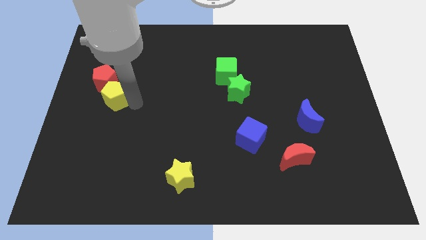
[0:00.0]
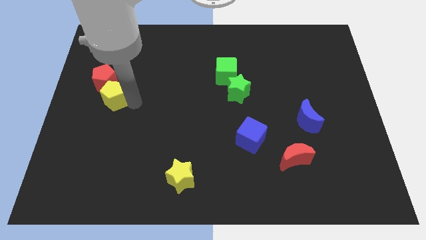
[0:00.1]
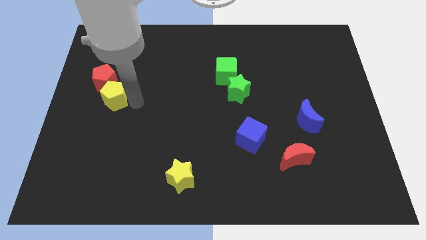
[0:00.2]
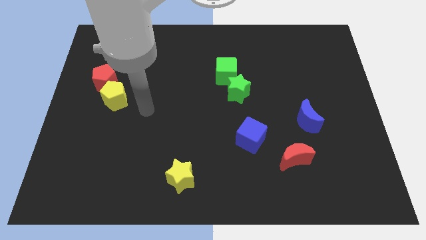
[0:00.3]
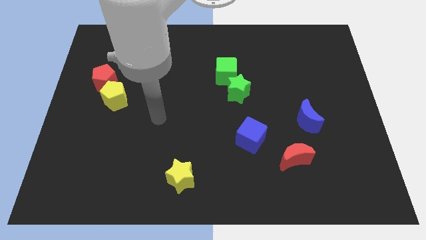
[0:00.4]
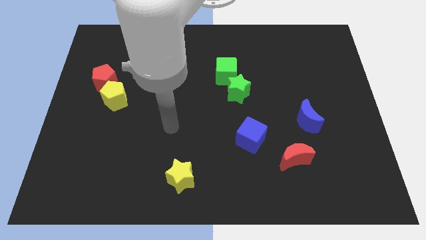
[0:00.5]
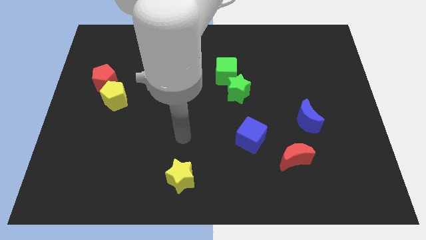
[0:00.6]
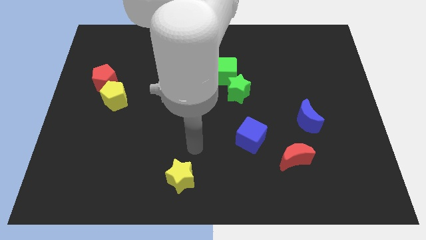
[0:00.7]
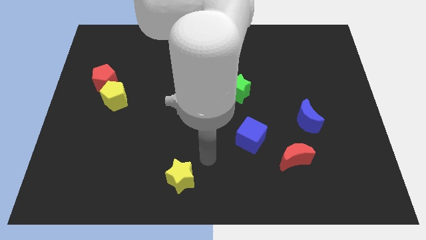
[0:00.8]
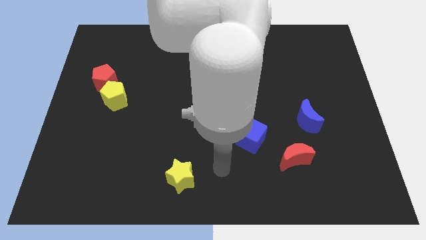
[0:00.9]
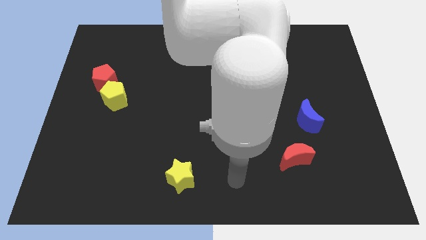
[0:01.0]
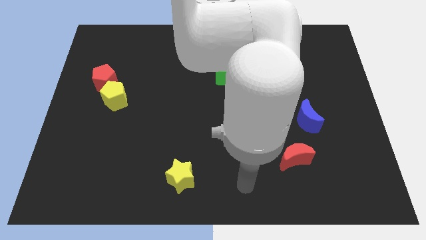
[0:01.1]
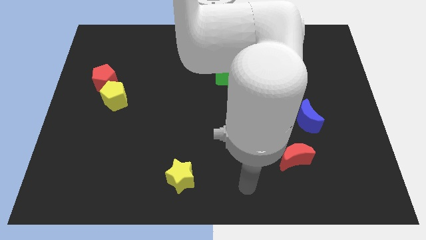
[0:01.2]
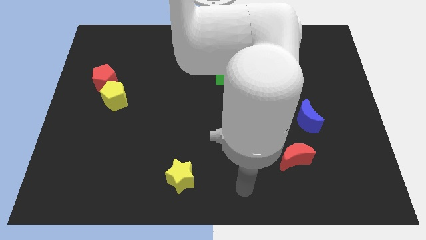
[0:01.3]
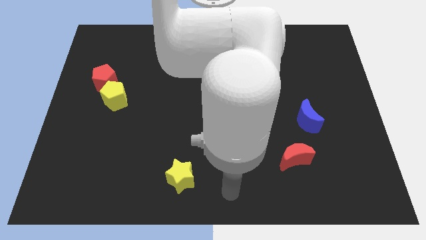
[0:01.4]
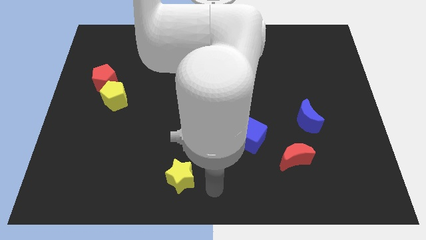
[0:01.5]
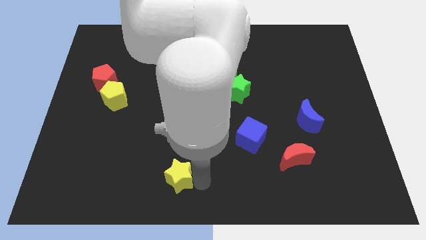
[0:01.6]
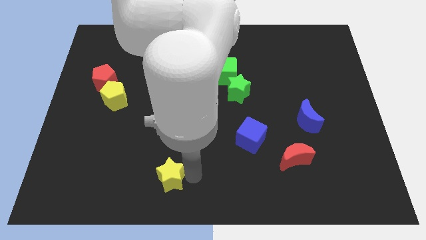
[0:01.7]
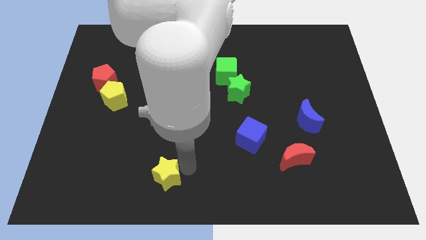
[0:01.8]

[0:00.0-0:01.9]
move your arm towards the yellow star

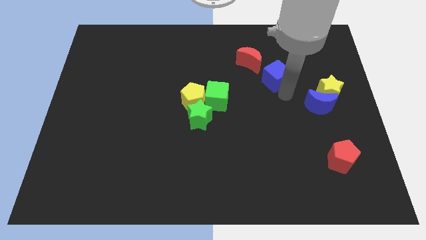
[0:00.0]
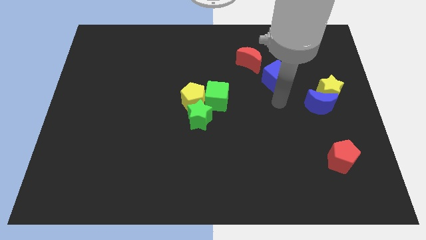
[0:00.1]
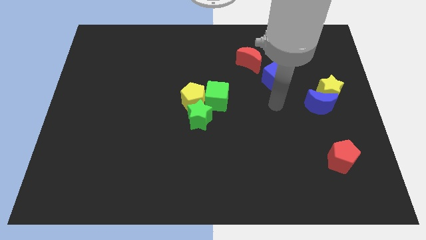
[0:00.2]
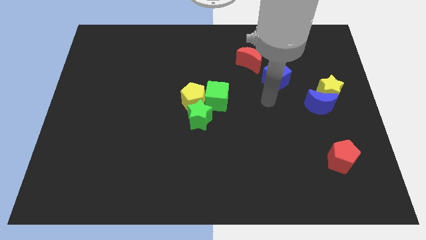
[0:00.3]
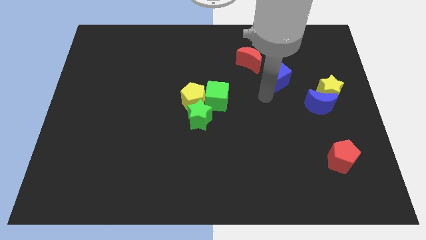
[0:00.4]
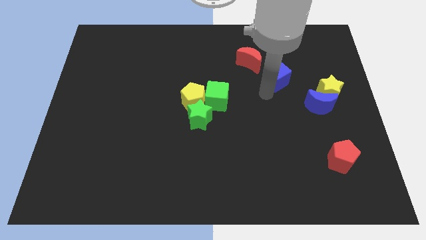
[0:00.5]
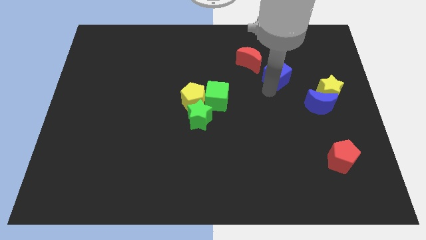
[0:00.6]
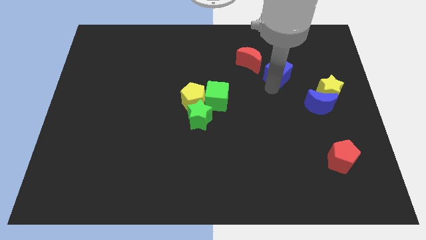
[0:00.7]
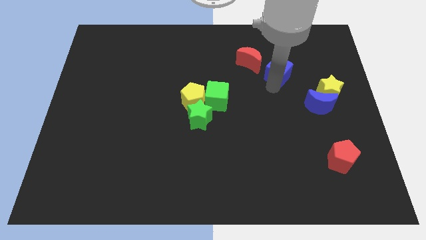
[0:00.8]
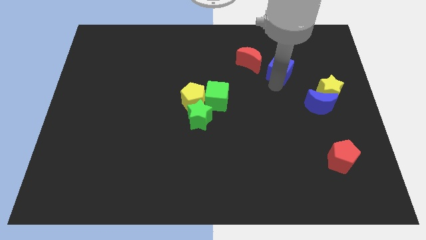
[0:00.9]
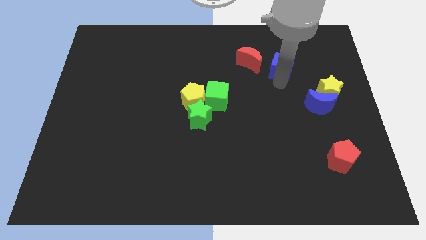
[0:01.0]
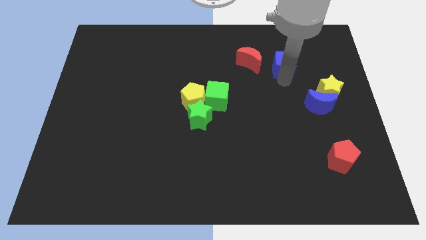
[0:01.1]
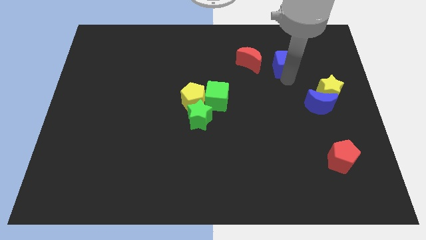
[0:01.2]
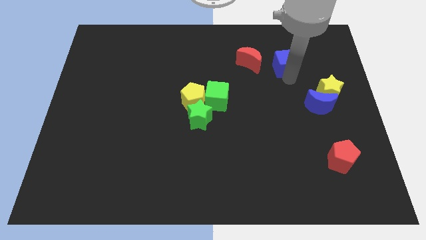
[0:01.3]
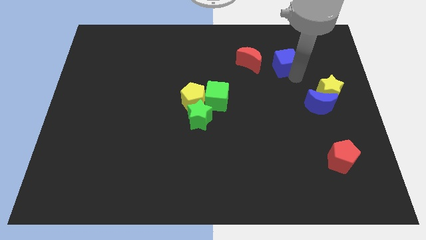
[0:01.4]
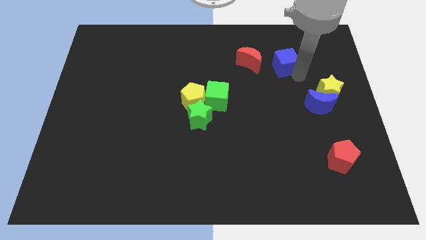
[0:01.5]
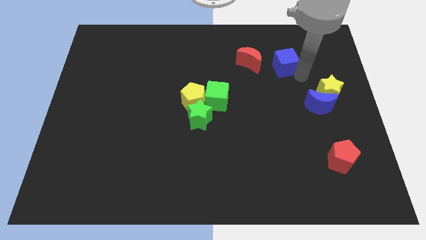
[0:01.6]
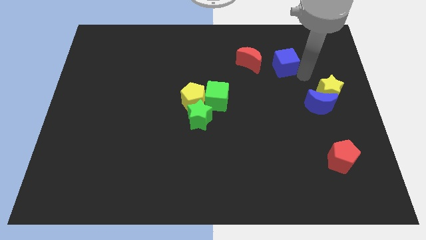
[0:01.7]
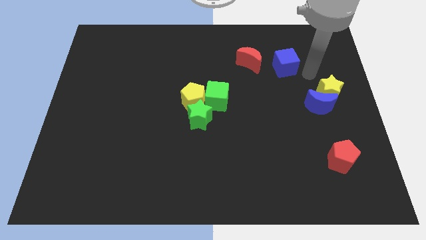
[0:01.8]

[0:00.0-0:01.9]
push the blue cube to the right side of the red crescent

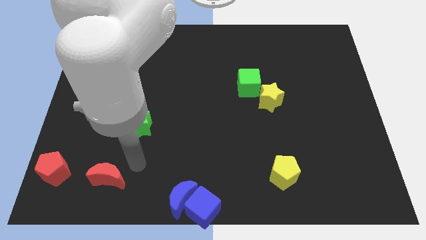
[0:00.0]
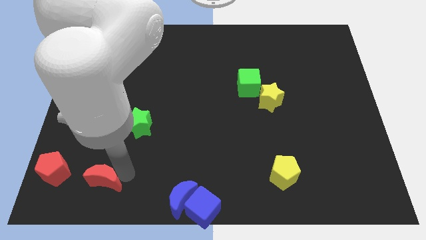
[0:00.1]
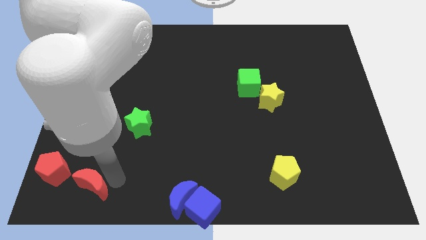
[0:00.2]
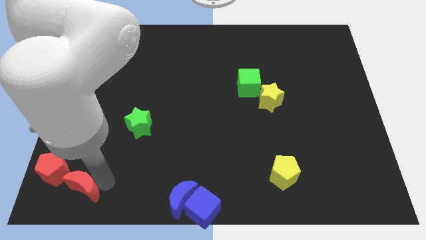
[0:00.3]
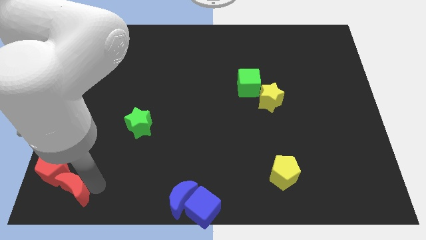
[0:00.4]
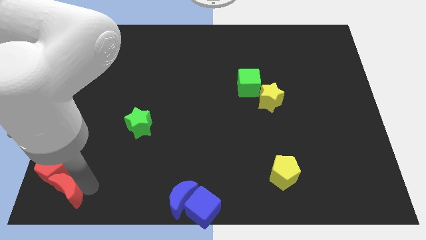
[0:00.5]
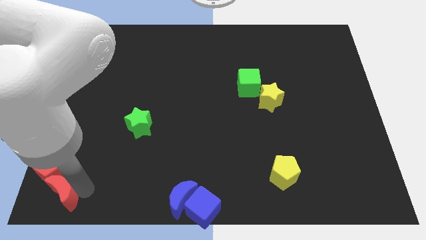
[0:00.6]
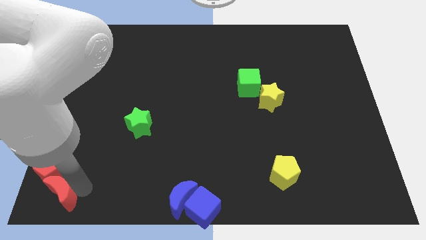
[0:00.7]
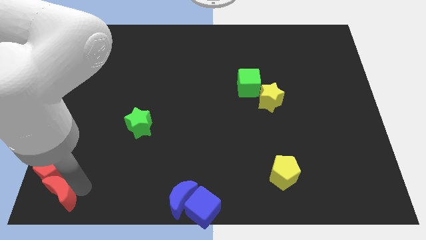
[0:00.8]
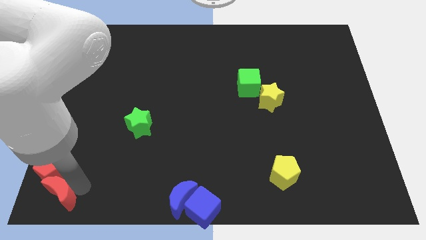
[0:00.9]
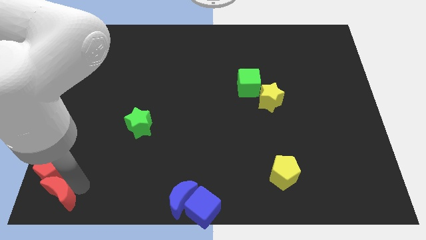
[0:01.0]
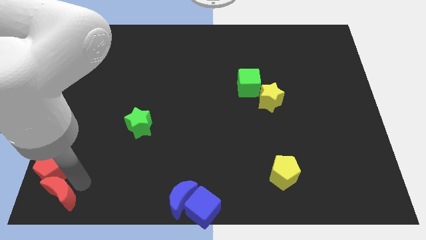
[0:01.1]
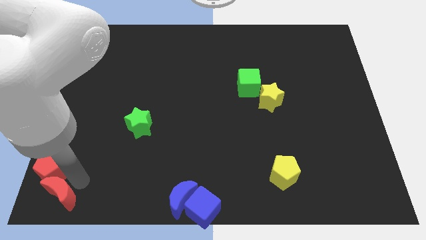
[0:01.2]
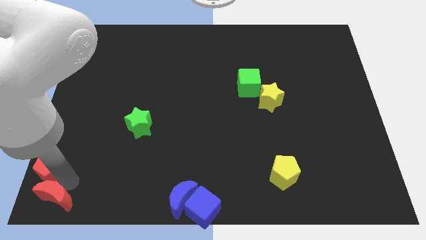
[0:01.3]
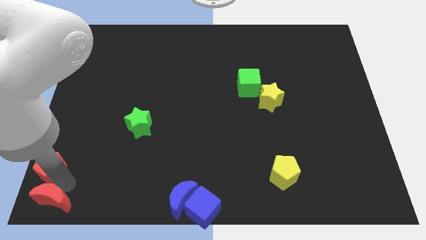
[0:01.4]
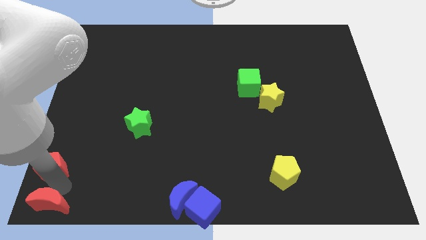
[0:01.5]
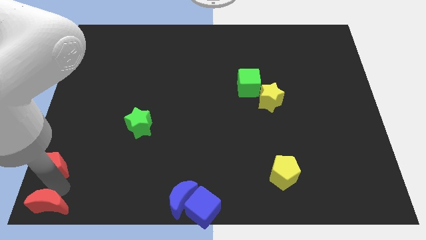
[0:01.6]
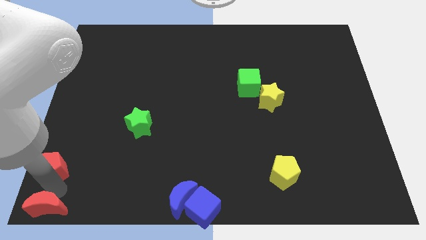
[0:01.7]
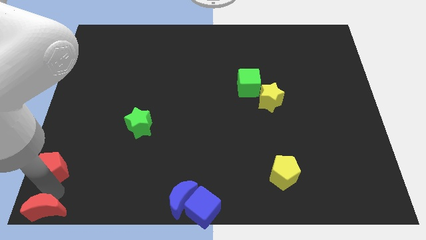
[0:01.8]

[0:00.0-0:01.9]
place the red crescent towards the left side of the board

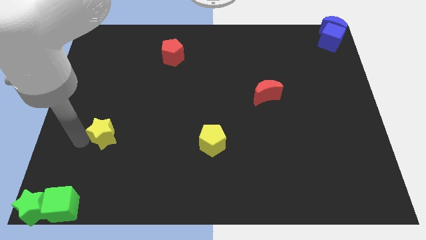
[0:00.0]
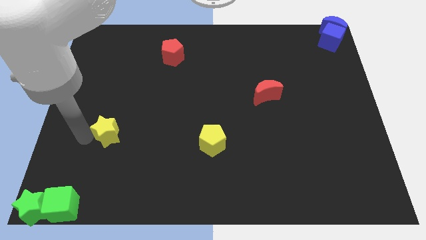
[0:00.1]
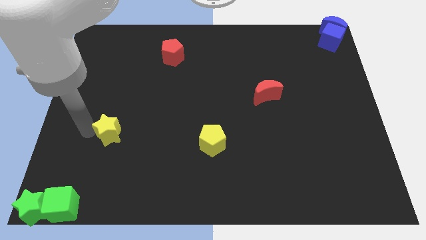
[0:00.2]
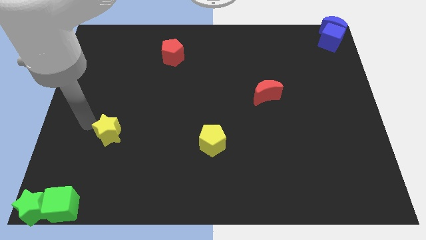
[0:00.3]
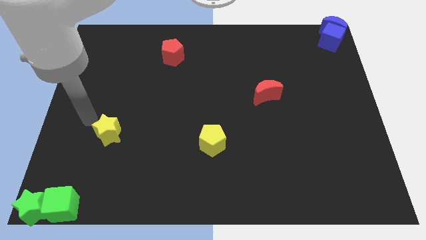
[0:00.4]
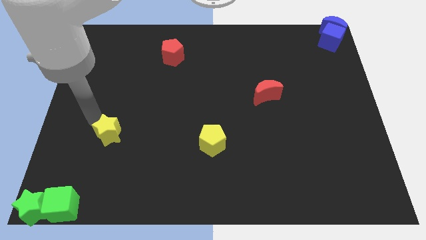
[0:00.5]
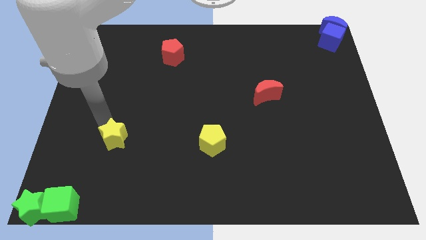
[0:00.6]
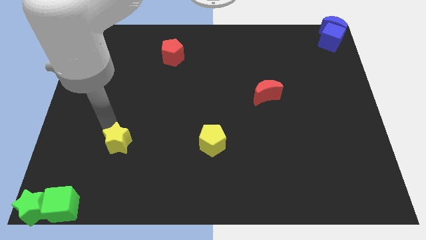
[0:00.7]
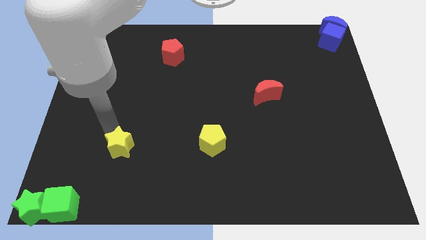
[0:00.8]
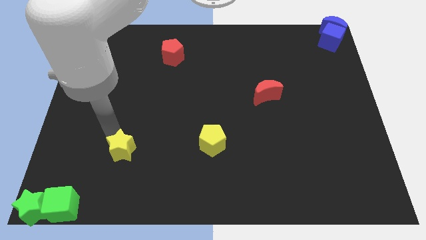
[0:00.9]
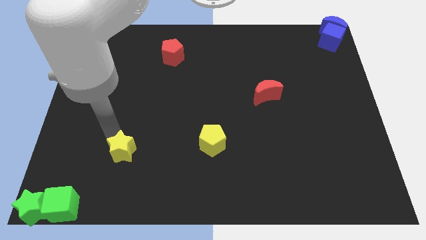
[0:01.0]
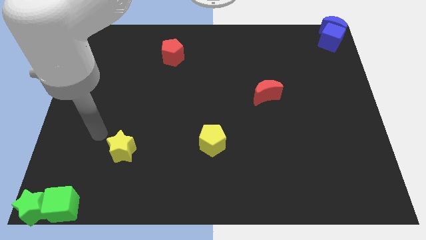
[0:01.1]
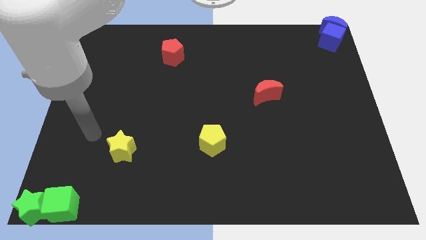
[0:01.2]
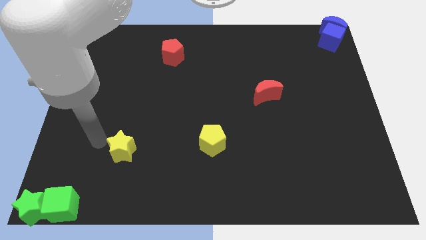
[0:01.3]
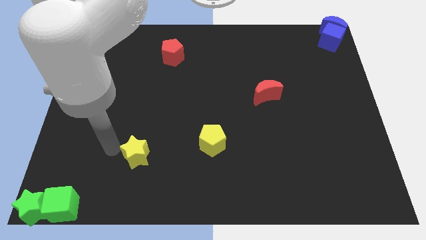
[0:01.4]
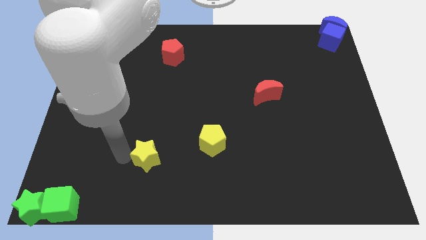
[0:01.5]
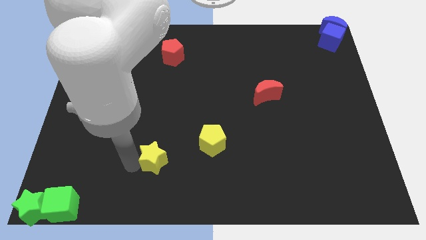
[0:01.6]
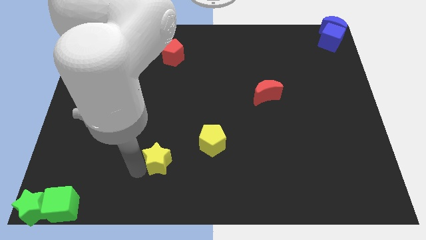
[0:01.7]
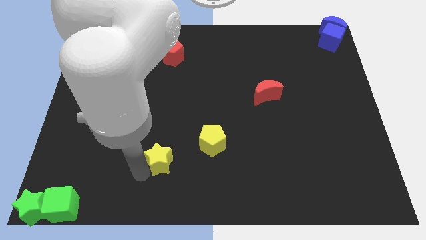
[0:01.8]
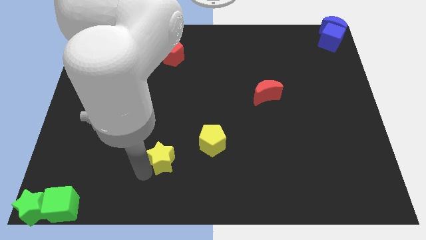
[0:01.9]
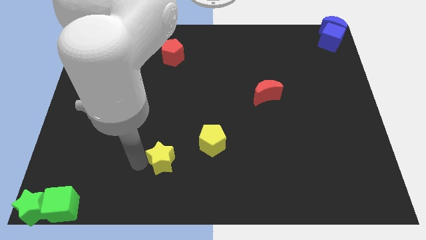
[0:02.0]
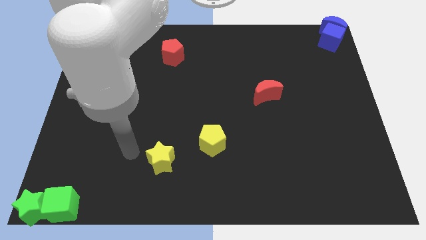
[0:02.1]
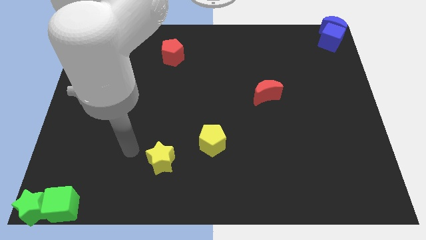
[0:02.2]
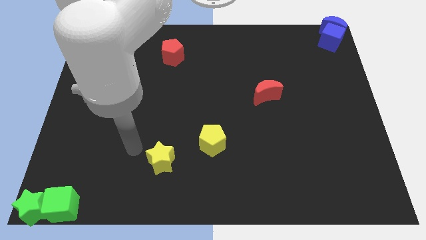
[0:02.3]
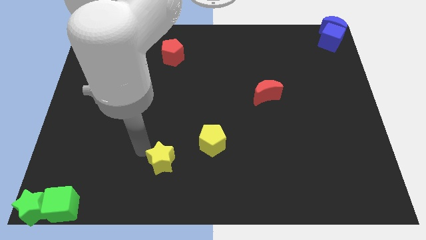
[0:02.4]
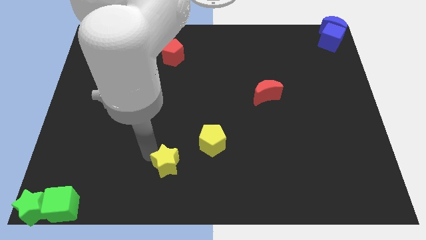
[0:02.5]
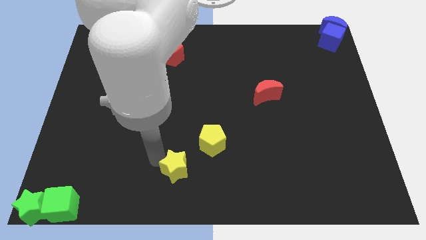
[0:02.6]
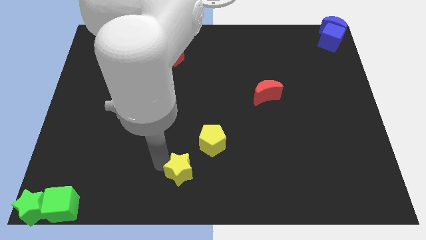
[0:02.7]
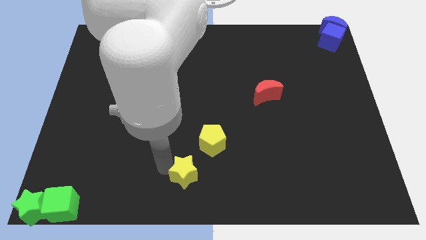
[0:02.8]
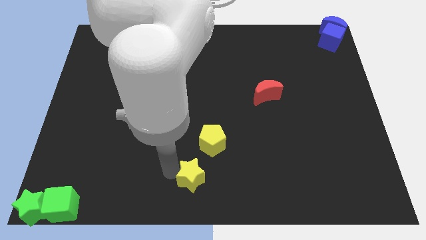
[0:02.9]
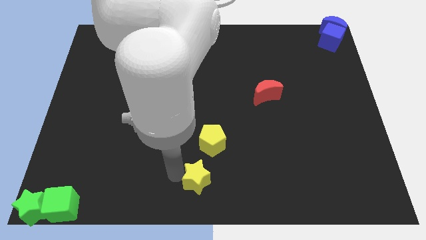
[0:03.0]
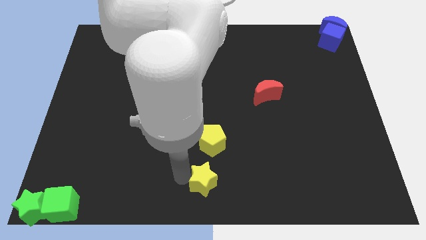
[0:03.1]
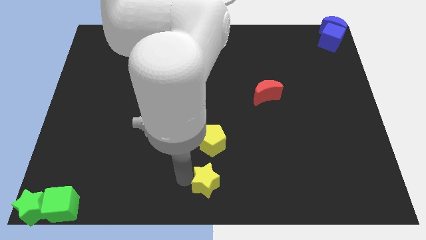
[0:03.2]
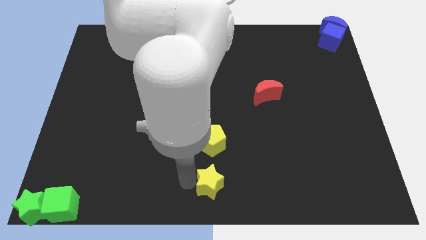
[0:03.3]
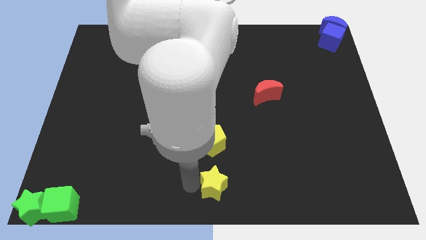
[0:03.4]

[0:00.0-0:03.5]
move the yellow star below to the yellow pentagon
